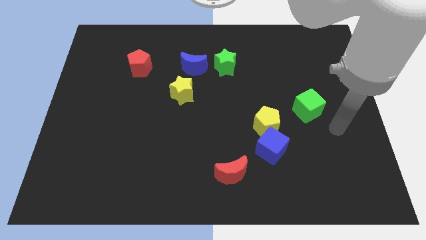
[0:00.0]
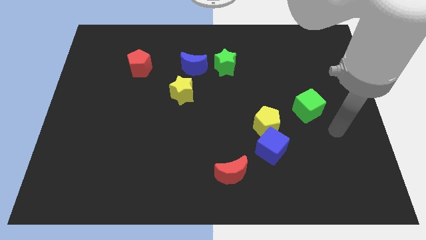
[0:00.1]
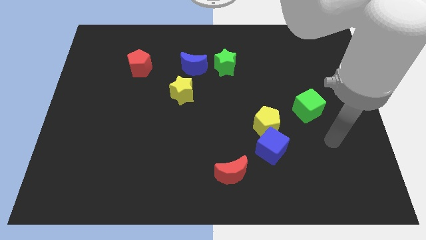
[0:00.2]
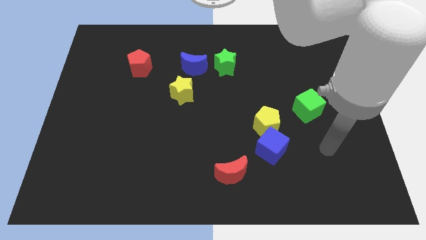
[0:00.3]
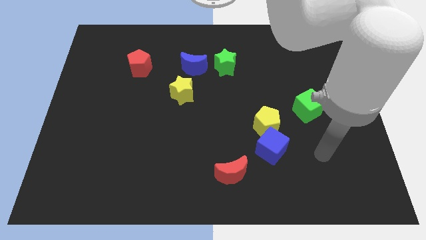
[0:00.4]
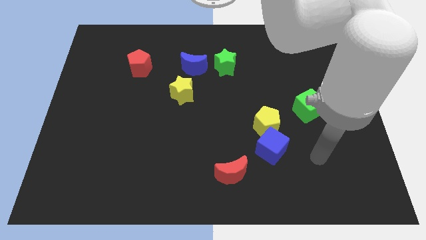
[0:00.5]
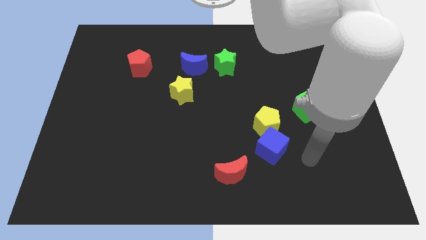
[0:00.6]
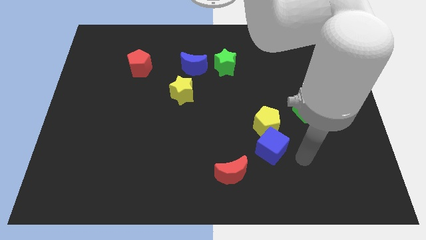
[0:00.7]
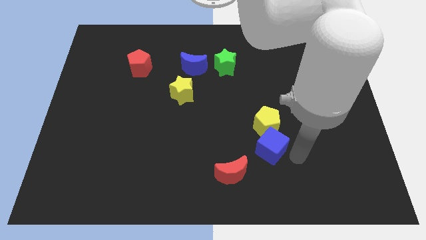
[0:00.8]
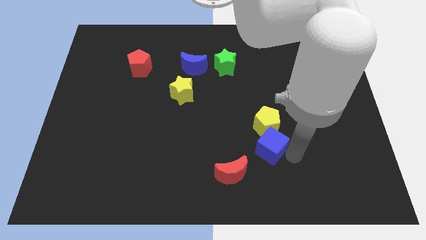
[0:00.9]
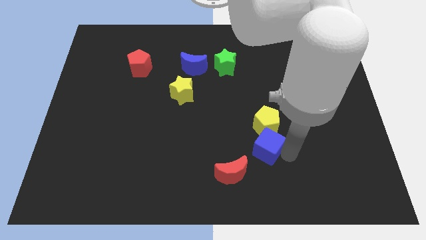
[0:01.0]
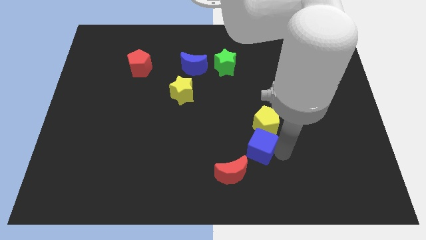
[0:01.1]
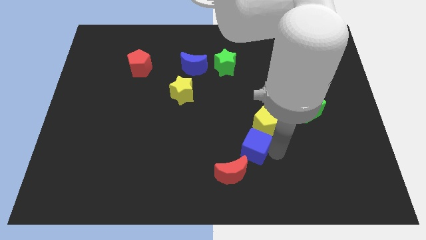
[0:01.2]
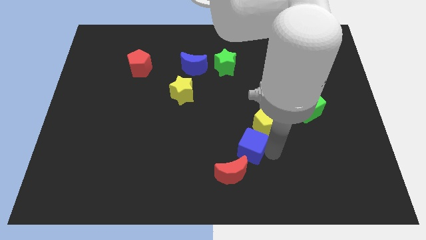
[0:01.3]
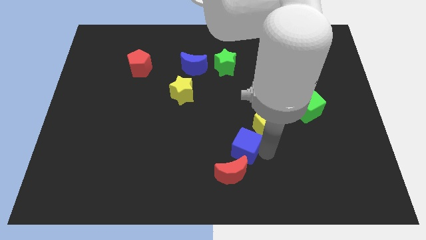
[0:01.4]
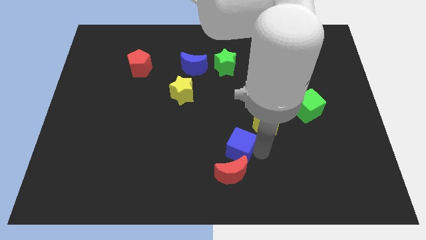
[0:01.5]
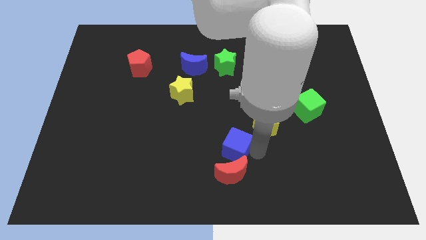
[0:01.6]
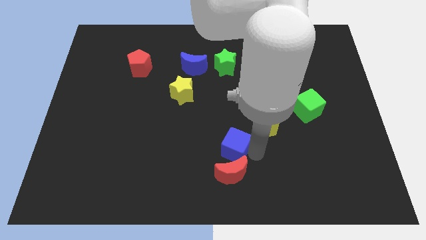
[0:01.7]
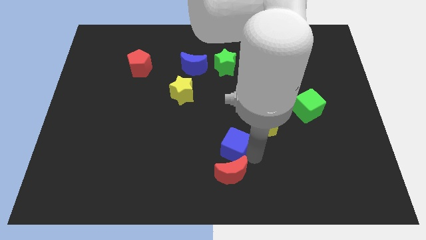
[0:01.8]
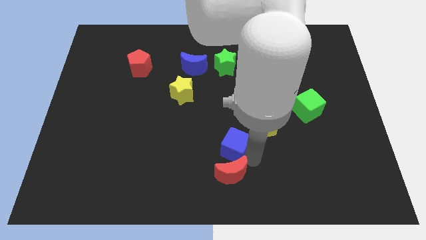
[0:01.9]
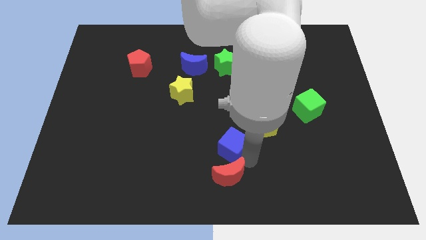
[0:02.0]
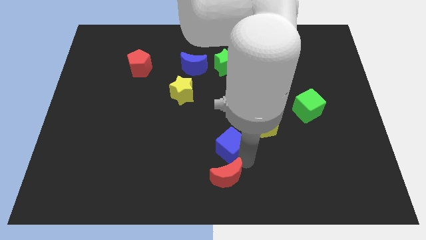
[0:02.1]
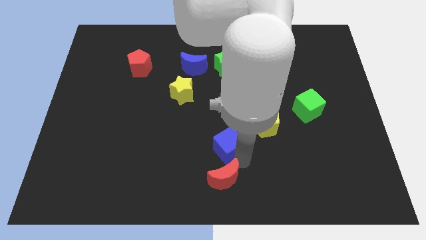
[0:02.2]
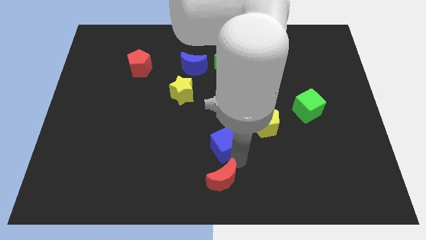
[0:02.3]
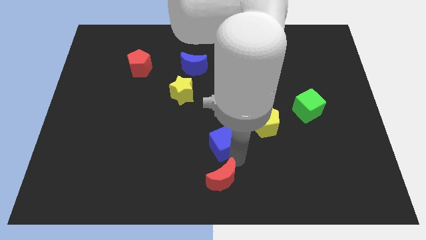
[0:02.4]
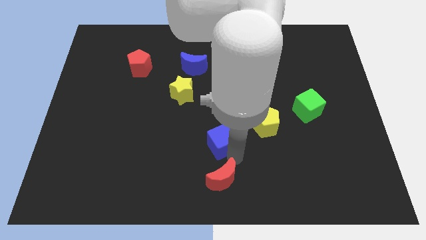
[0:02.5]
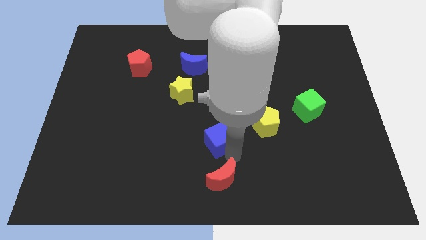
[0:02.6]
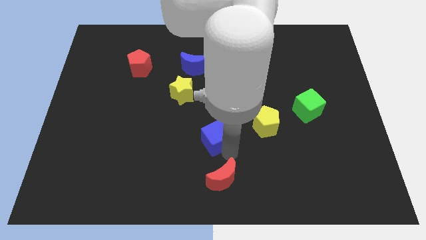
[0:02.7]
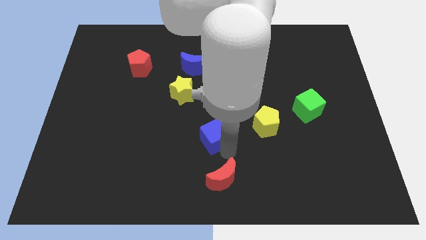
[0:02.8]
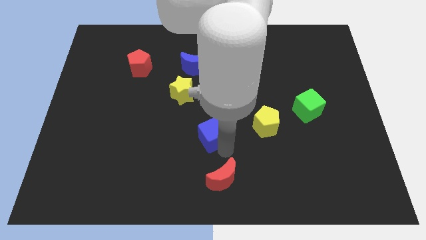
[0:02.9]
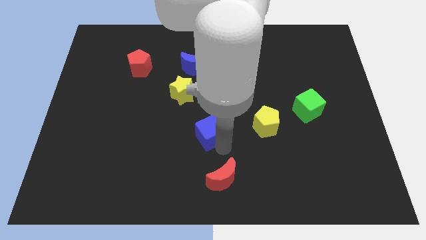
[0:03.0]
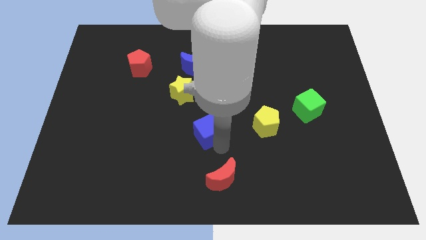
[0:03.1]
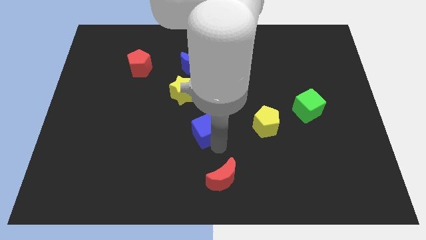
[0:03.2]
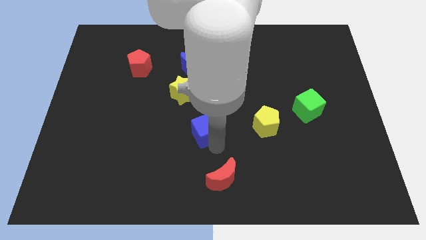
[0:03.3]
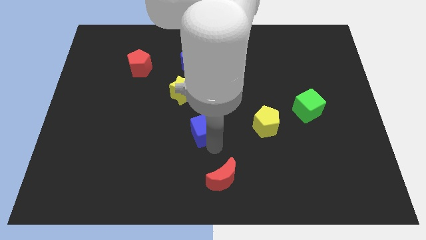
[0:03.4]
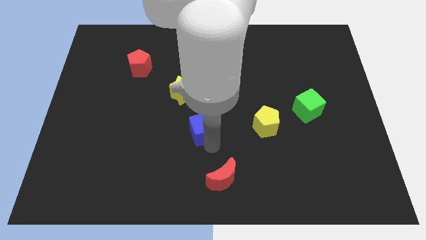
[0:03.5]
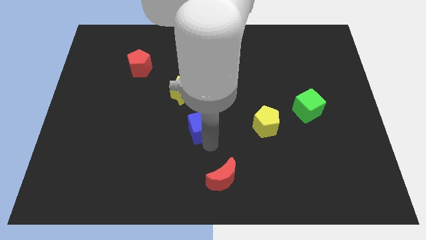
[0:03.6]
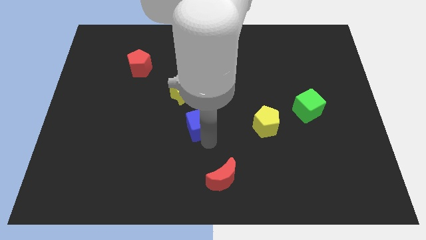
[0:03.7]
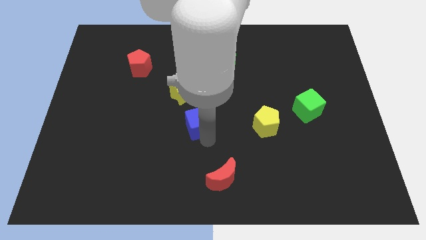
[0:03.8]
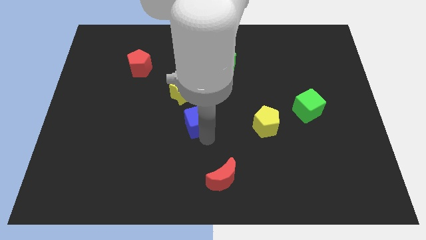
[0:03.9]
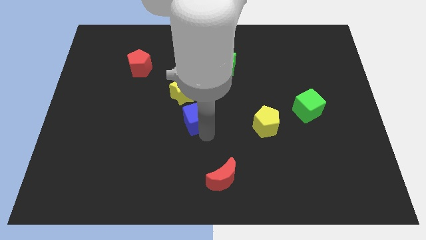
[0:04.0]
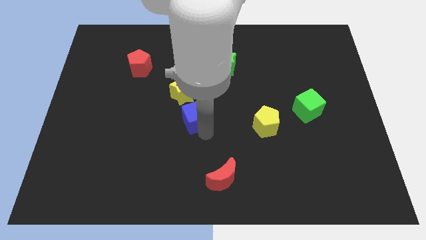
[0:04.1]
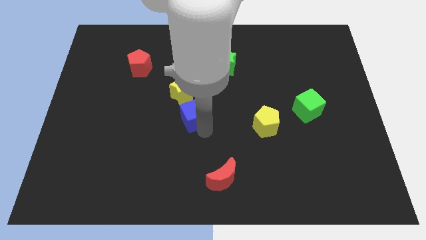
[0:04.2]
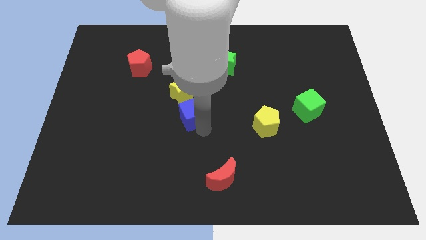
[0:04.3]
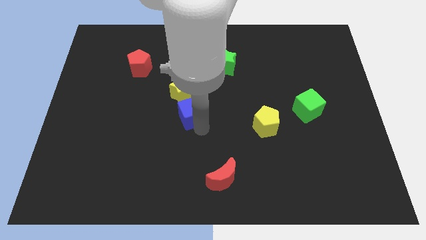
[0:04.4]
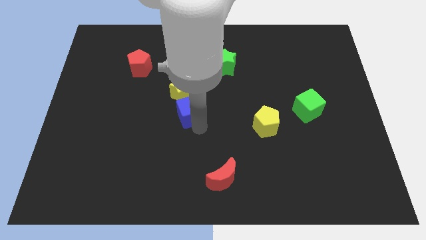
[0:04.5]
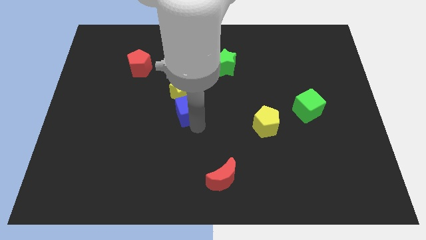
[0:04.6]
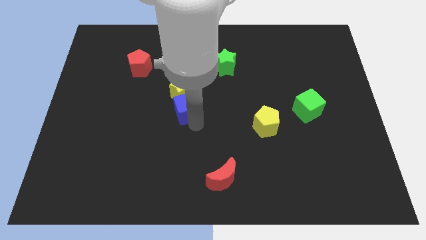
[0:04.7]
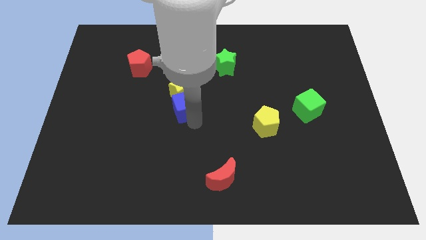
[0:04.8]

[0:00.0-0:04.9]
push the blue cube to the yellow star

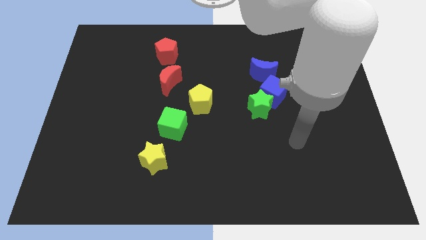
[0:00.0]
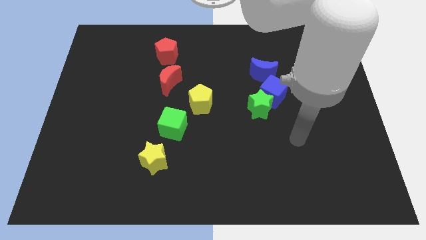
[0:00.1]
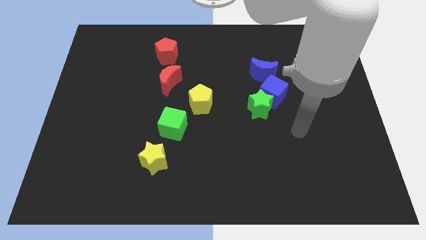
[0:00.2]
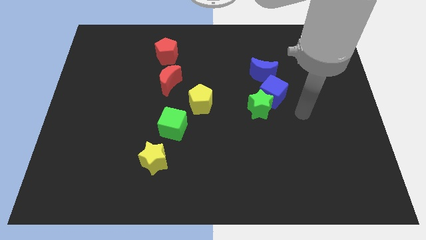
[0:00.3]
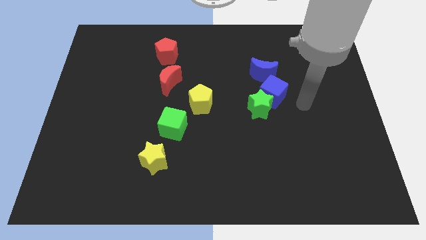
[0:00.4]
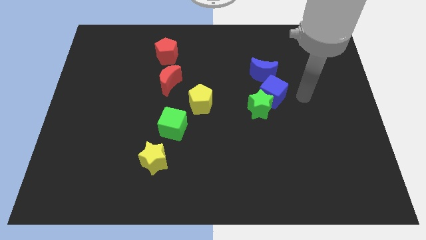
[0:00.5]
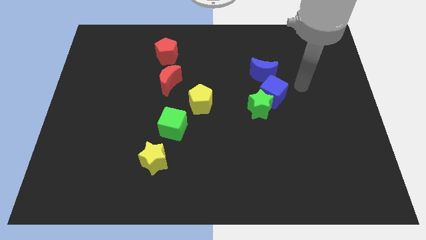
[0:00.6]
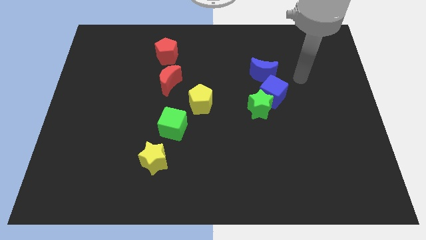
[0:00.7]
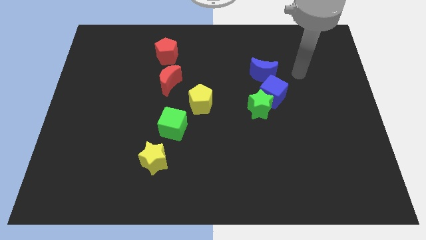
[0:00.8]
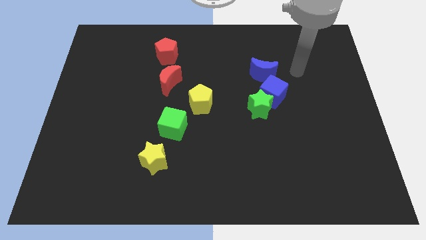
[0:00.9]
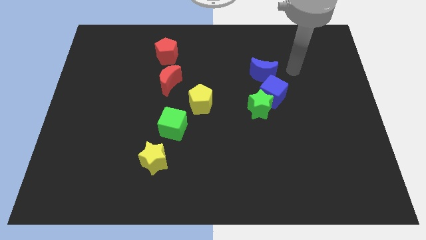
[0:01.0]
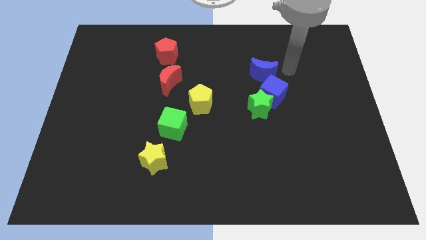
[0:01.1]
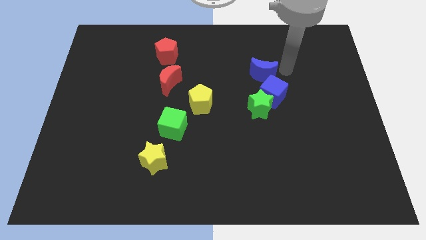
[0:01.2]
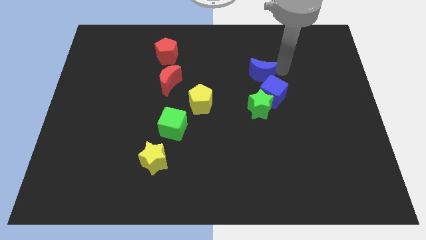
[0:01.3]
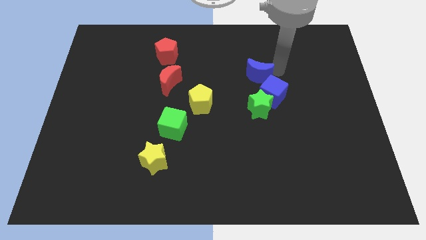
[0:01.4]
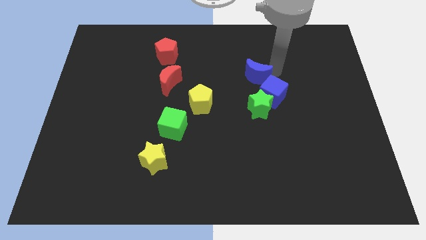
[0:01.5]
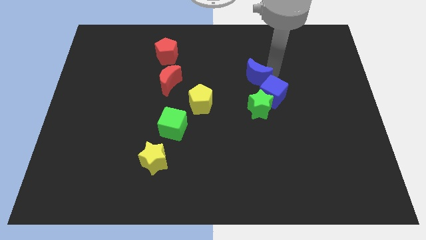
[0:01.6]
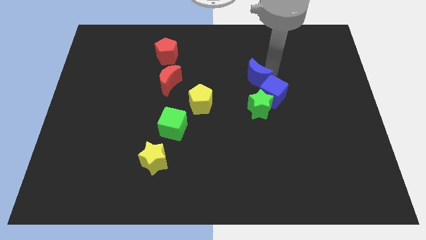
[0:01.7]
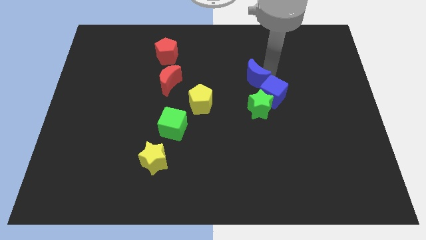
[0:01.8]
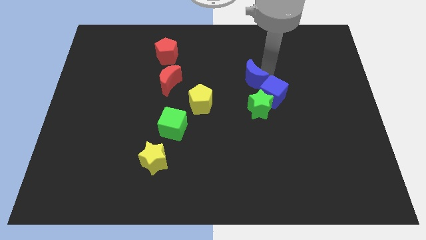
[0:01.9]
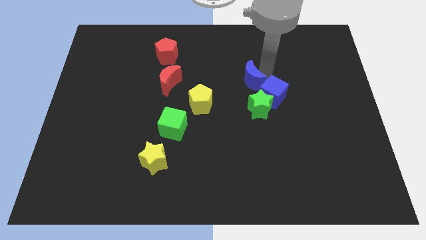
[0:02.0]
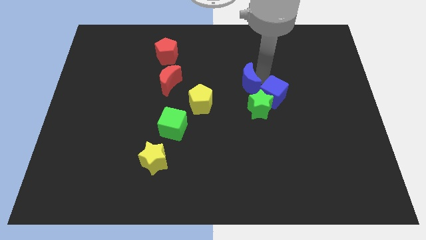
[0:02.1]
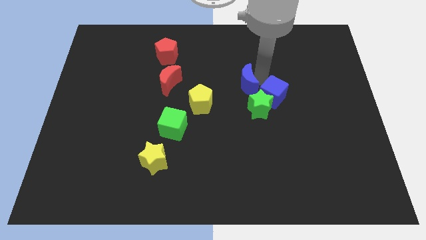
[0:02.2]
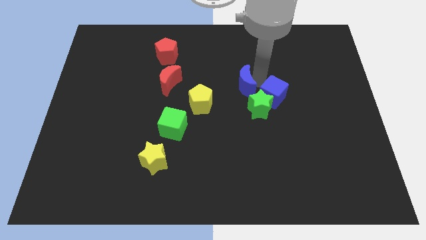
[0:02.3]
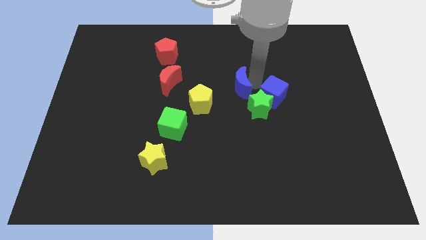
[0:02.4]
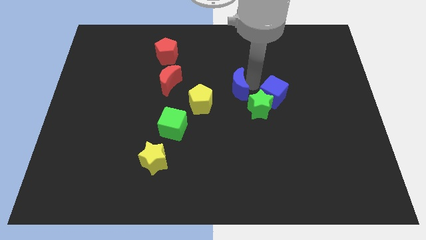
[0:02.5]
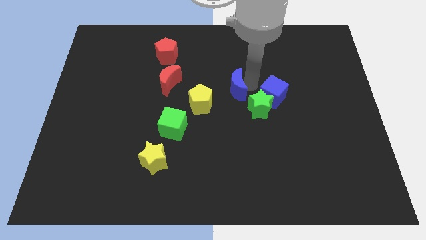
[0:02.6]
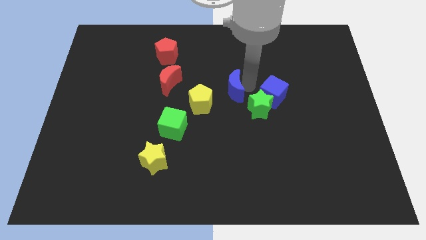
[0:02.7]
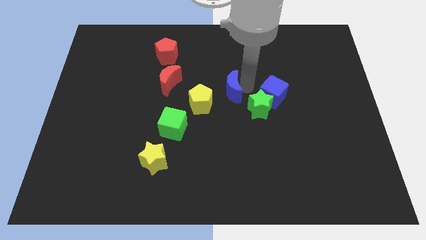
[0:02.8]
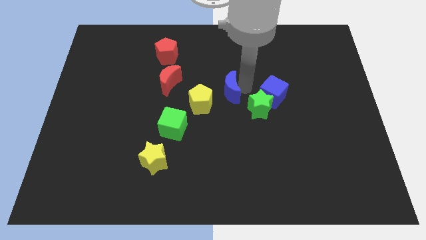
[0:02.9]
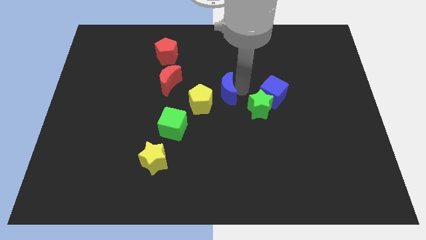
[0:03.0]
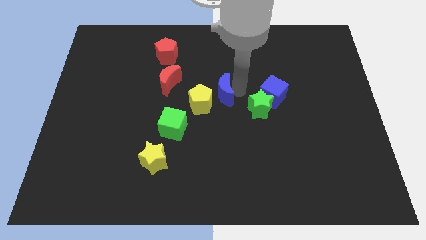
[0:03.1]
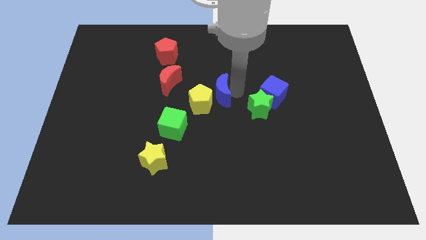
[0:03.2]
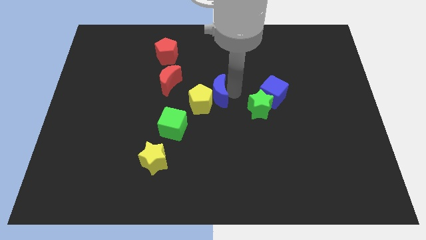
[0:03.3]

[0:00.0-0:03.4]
push the blue moon to the yellow pentagon

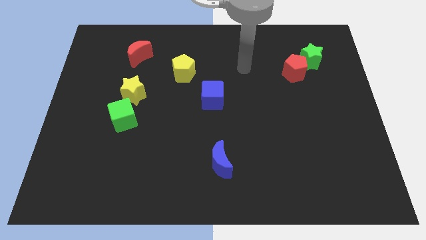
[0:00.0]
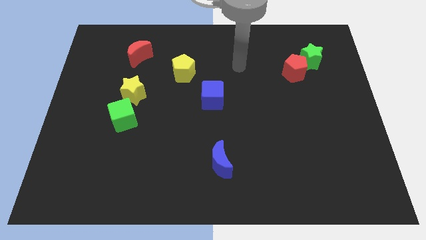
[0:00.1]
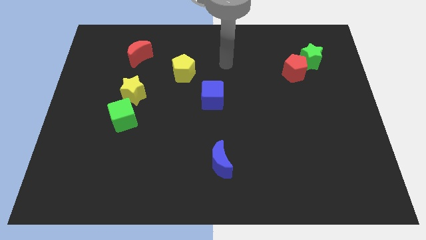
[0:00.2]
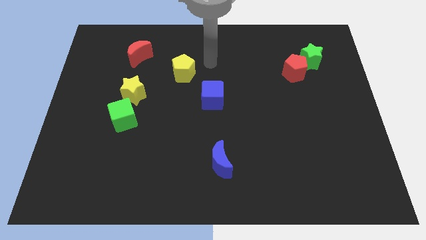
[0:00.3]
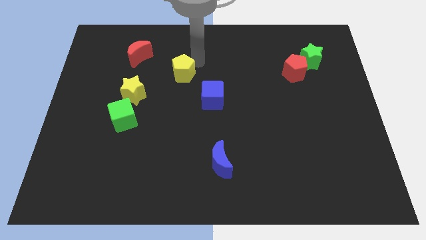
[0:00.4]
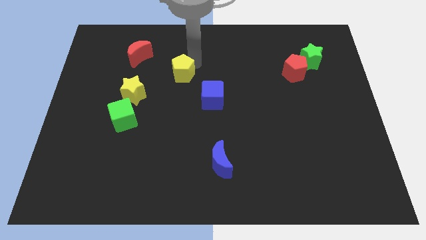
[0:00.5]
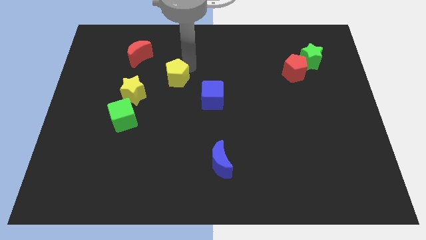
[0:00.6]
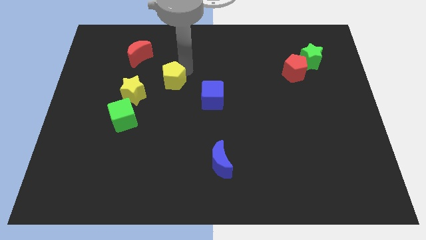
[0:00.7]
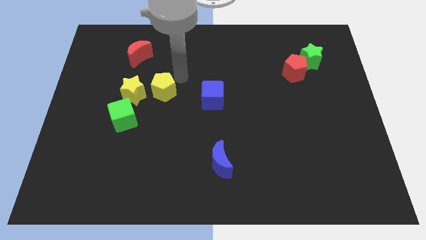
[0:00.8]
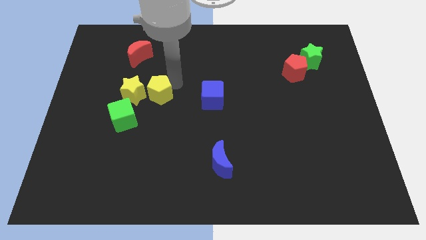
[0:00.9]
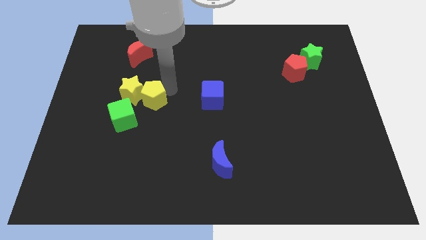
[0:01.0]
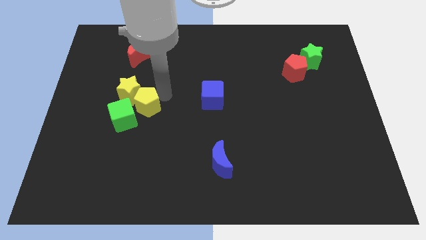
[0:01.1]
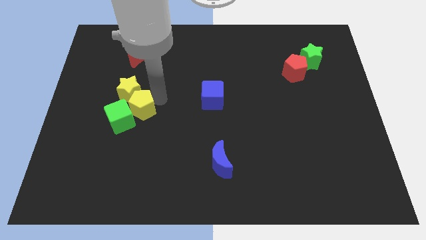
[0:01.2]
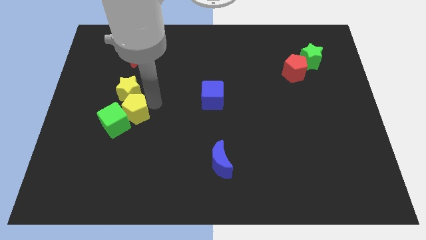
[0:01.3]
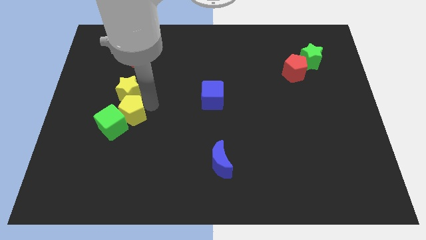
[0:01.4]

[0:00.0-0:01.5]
push the yellow pentagon next to the green cube
